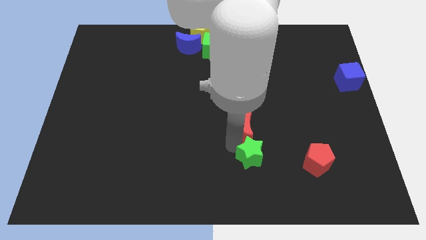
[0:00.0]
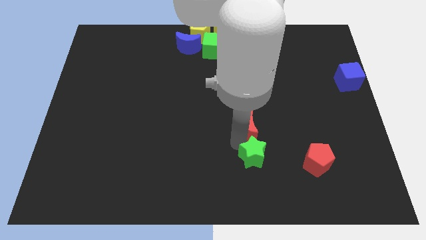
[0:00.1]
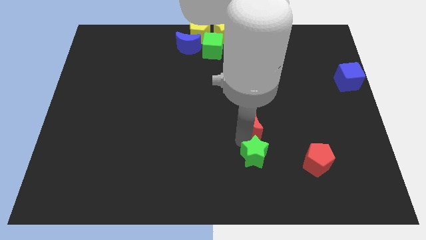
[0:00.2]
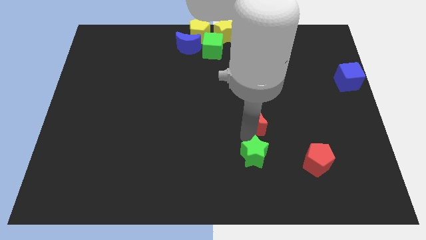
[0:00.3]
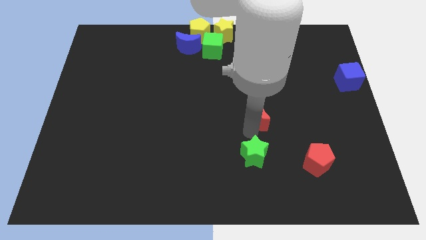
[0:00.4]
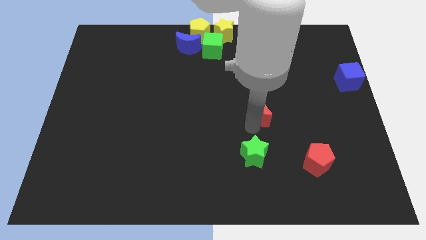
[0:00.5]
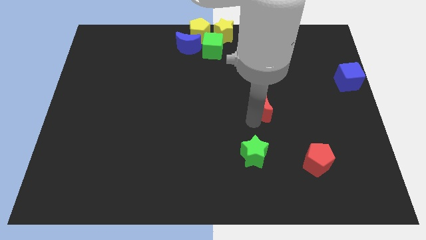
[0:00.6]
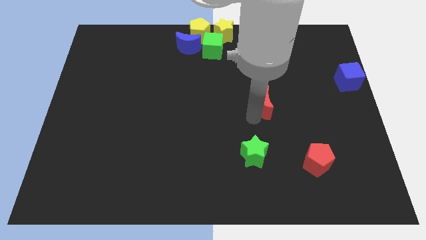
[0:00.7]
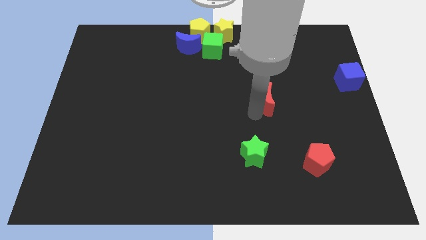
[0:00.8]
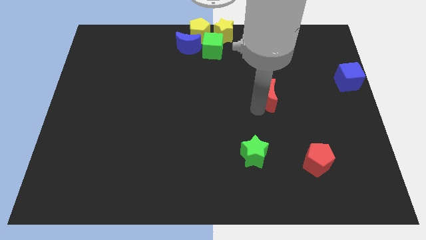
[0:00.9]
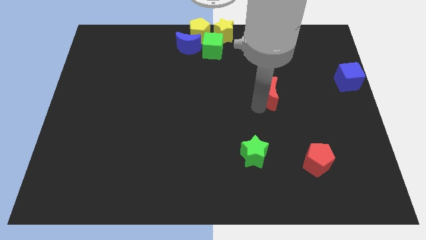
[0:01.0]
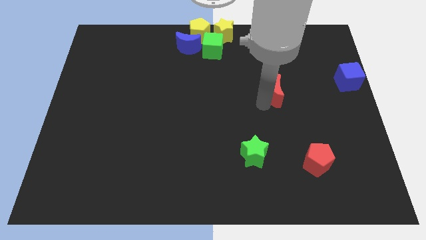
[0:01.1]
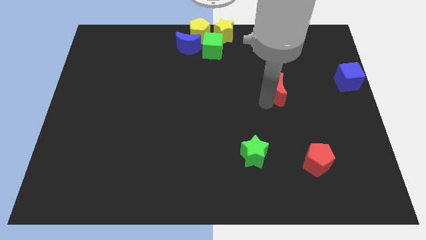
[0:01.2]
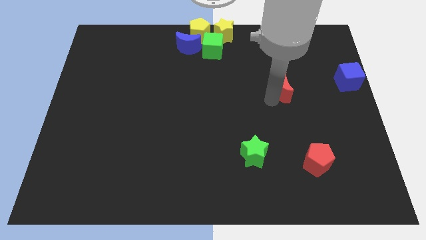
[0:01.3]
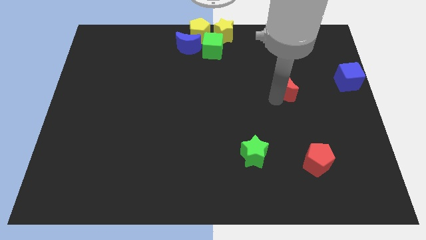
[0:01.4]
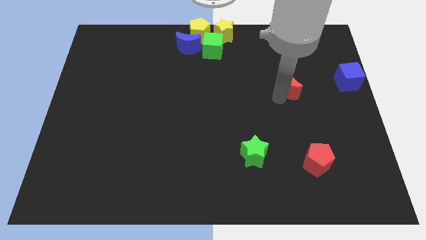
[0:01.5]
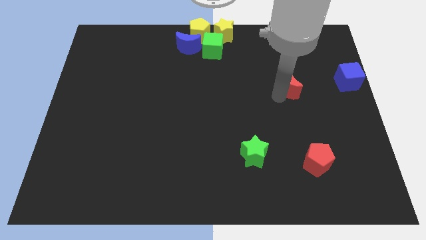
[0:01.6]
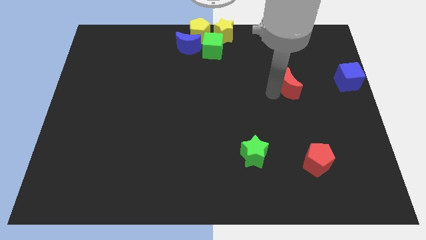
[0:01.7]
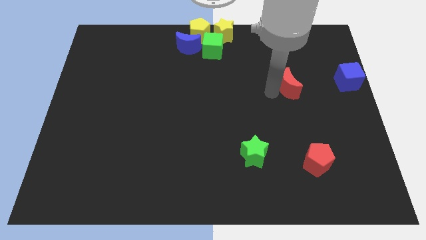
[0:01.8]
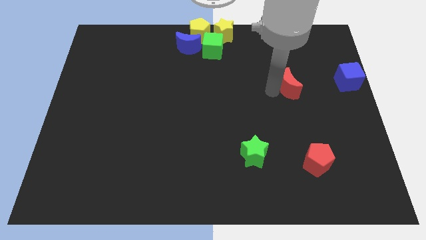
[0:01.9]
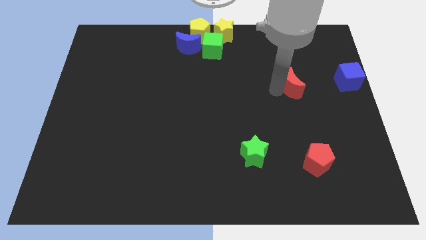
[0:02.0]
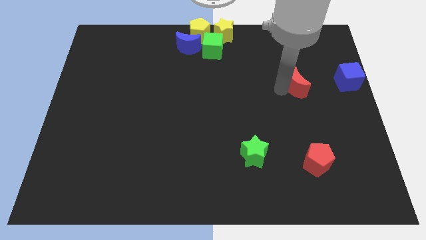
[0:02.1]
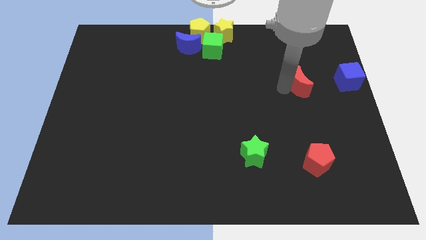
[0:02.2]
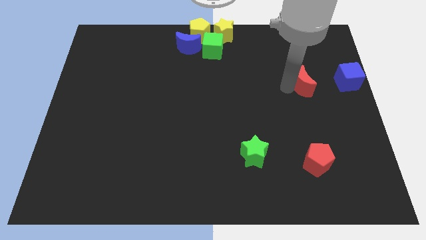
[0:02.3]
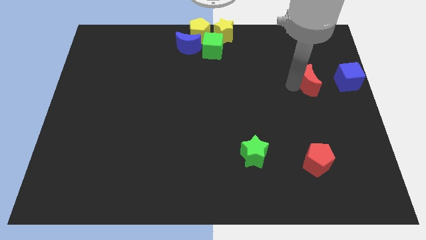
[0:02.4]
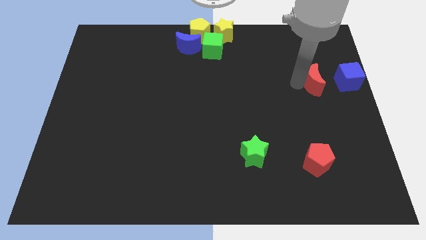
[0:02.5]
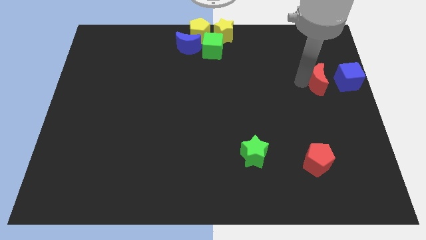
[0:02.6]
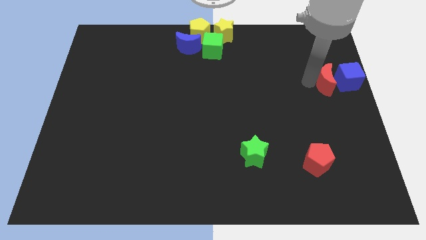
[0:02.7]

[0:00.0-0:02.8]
push the red crescent to the left of the blue cube

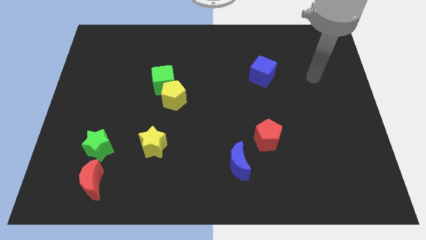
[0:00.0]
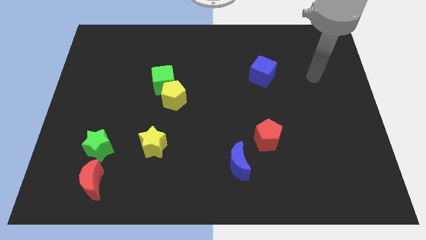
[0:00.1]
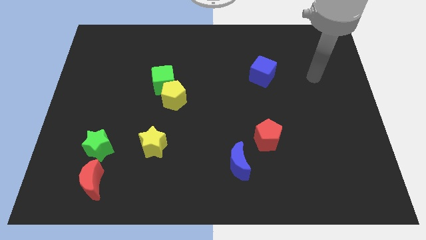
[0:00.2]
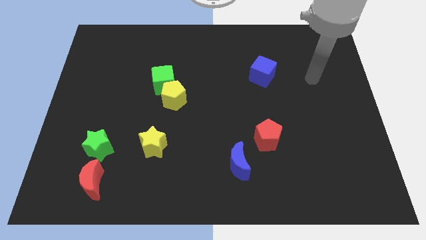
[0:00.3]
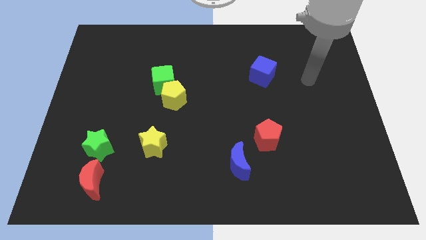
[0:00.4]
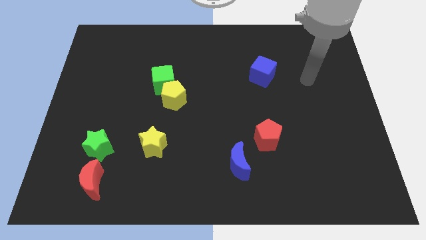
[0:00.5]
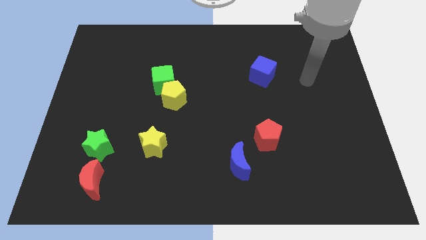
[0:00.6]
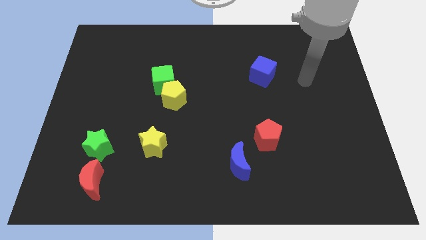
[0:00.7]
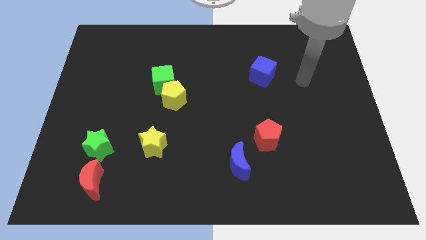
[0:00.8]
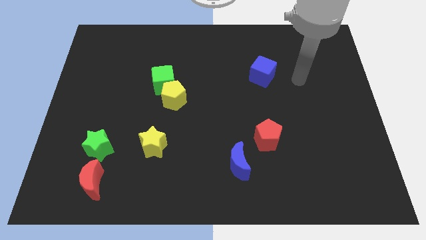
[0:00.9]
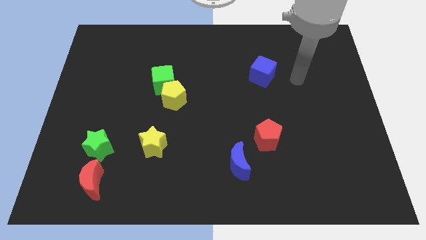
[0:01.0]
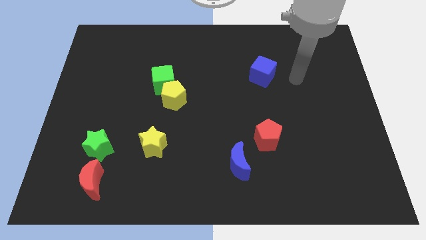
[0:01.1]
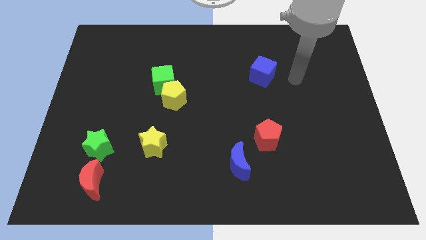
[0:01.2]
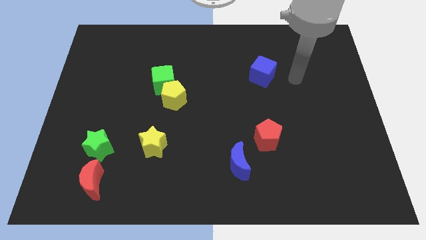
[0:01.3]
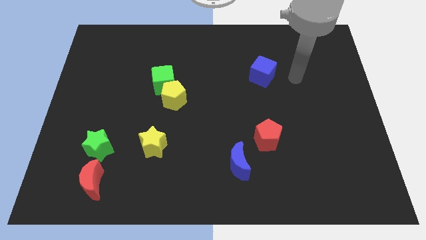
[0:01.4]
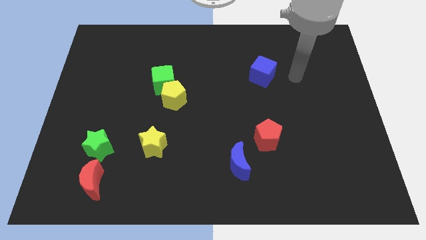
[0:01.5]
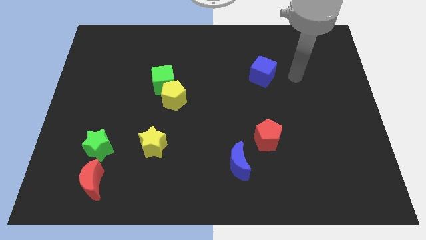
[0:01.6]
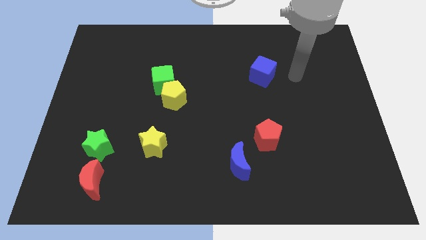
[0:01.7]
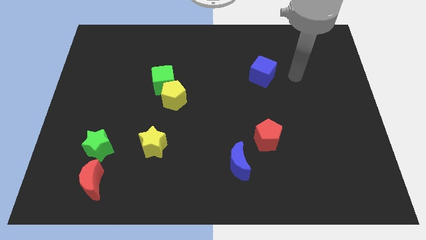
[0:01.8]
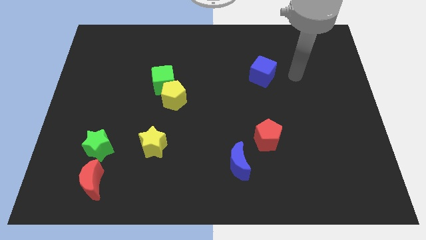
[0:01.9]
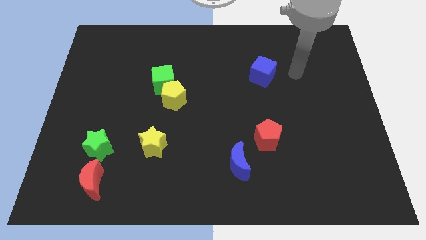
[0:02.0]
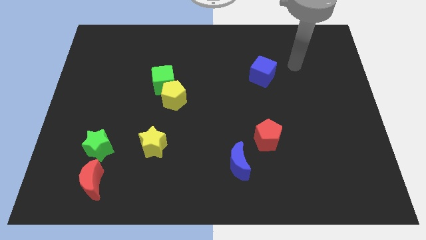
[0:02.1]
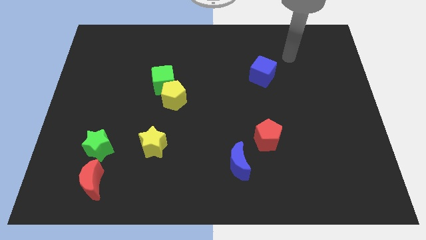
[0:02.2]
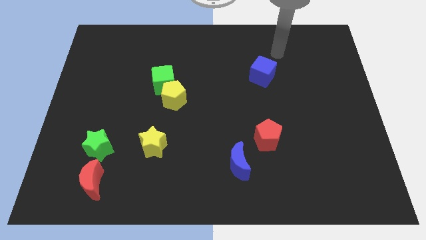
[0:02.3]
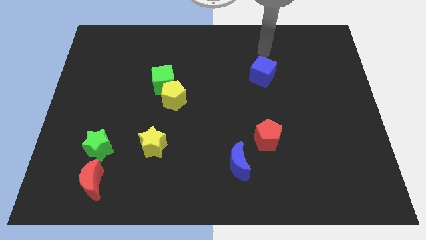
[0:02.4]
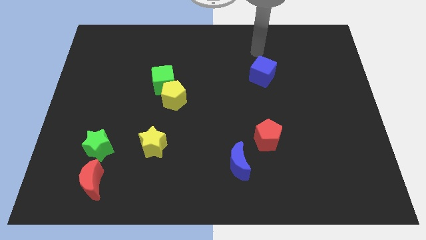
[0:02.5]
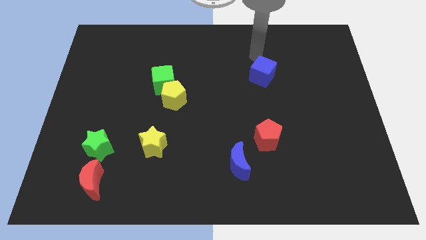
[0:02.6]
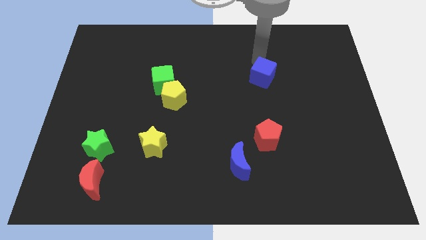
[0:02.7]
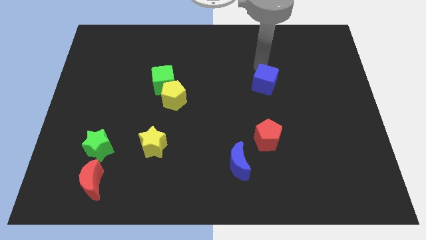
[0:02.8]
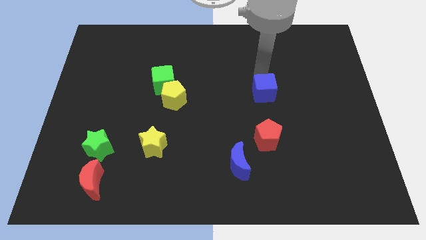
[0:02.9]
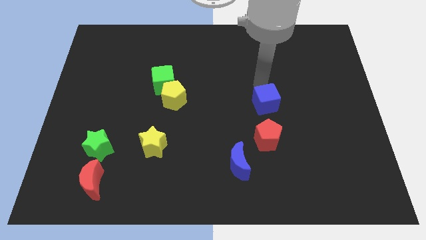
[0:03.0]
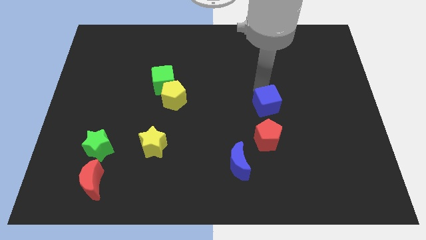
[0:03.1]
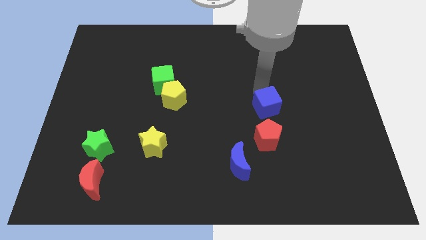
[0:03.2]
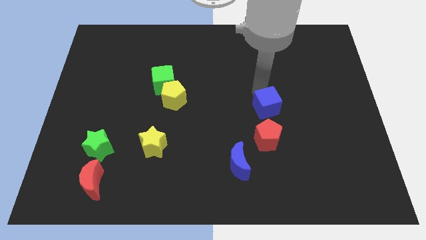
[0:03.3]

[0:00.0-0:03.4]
push the blue cube above the red pentagon

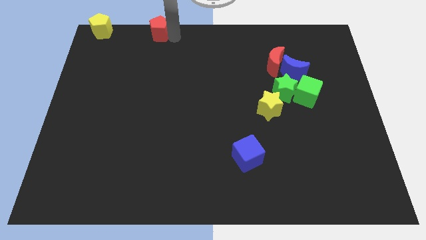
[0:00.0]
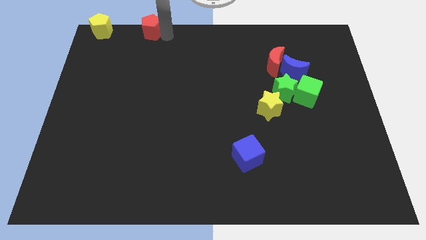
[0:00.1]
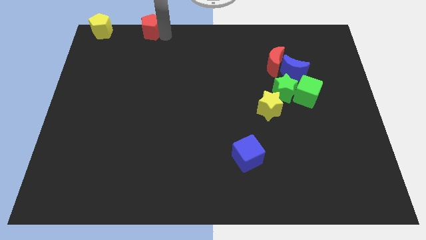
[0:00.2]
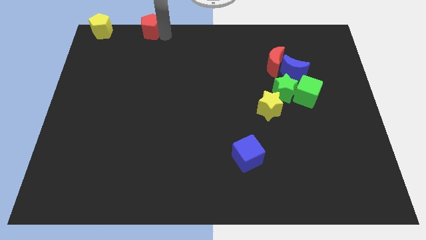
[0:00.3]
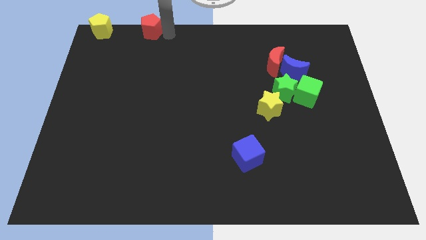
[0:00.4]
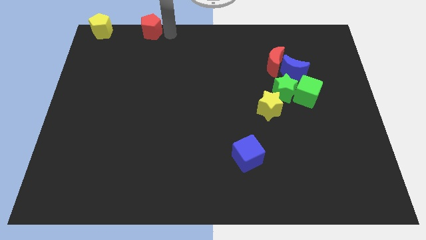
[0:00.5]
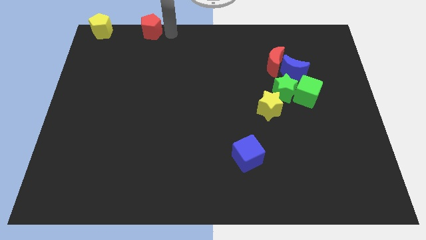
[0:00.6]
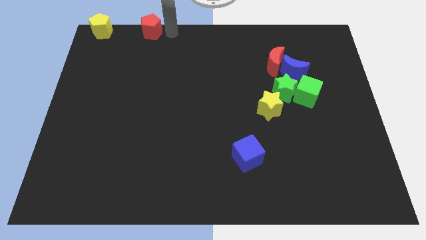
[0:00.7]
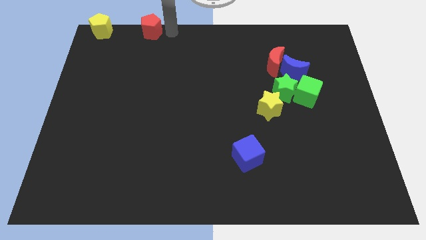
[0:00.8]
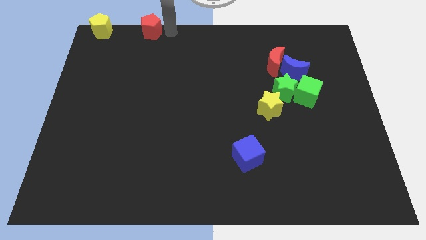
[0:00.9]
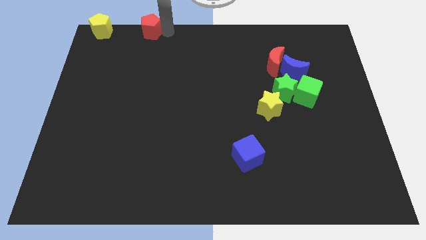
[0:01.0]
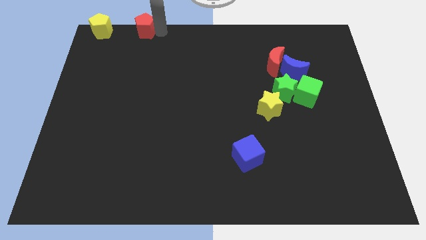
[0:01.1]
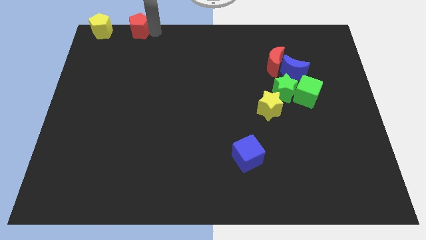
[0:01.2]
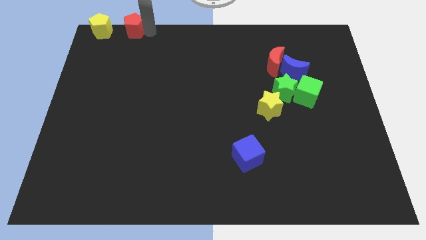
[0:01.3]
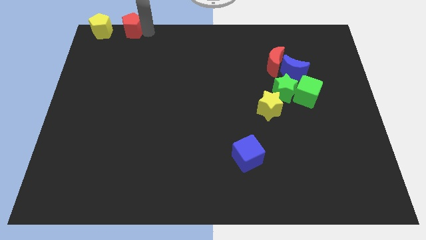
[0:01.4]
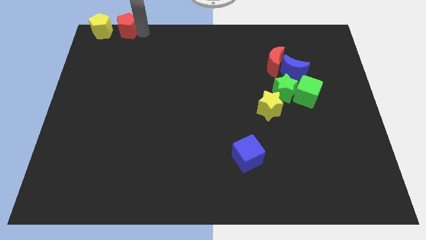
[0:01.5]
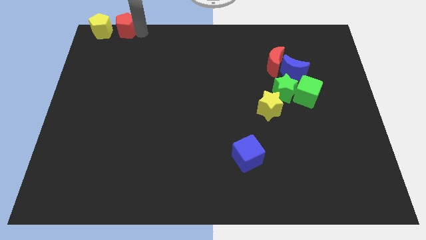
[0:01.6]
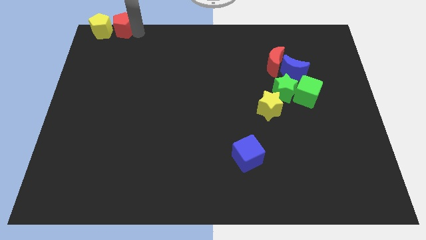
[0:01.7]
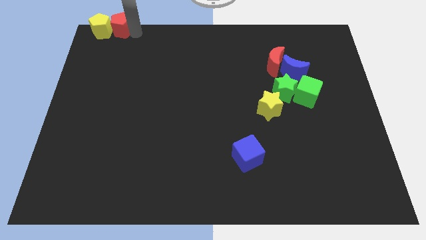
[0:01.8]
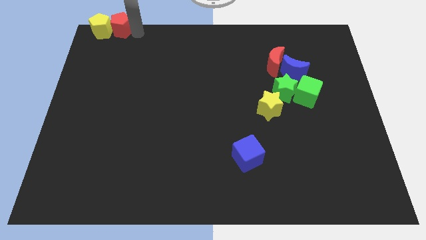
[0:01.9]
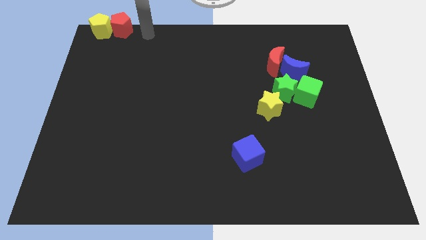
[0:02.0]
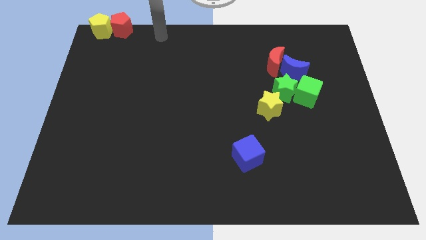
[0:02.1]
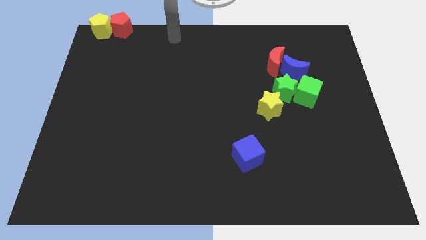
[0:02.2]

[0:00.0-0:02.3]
move red pentagon into yellow pentagon

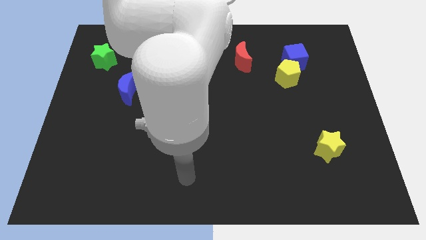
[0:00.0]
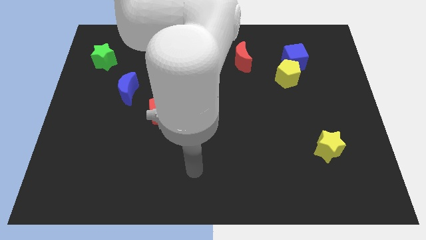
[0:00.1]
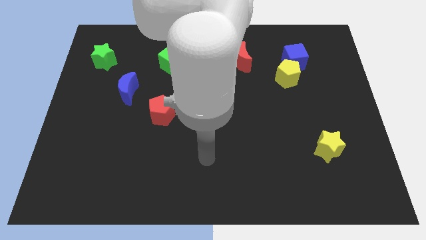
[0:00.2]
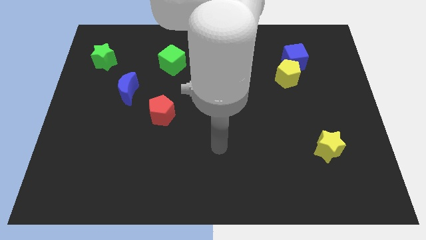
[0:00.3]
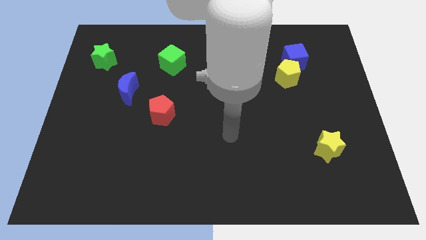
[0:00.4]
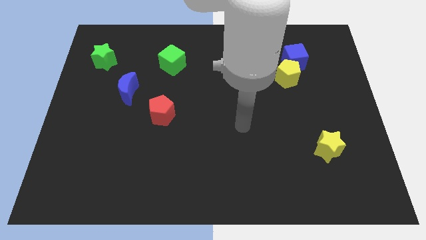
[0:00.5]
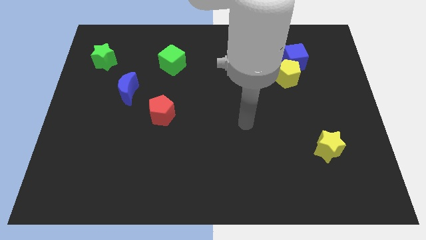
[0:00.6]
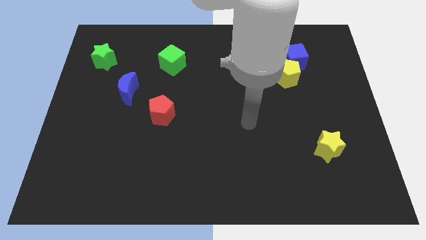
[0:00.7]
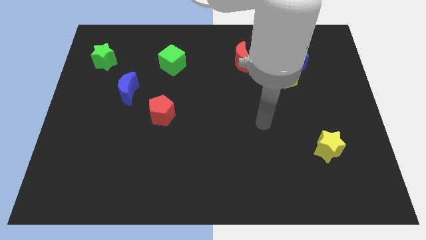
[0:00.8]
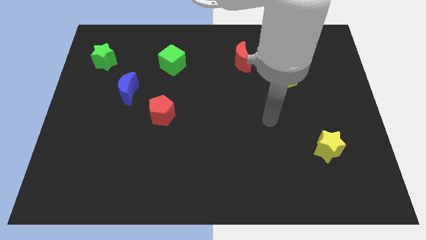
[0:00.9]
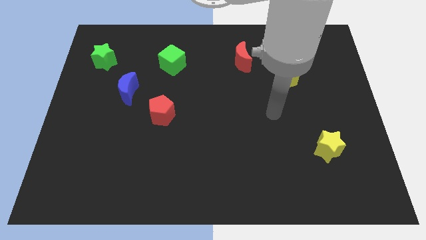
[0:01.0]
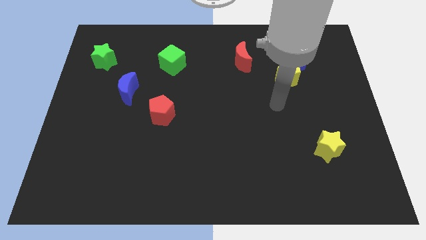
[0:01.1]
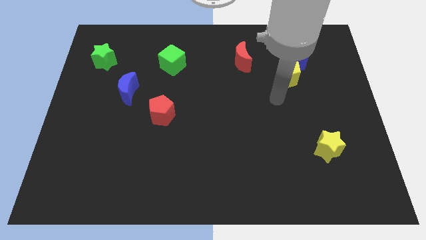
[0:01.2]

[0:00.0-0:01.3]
move your hand towards the yellow pentagon
